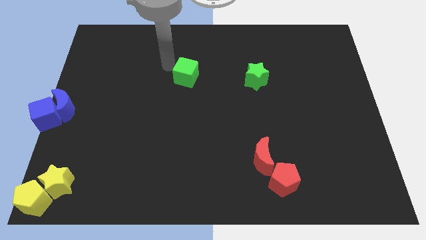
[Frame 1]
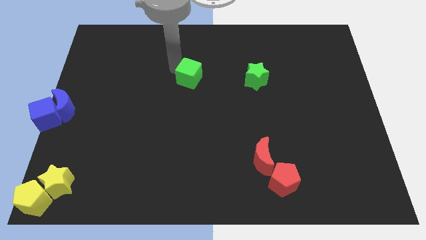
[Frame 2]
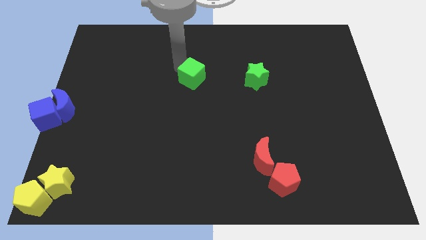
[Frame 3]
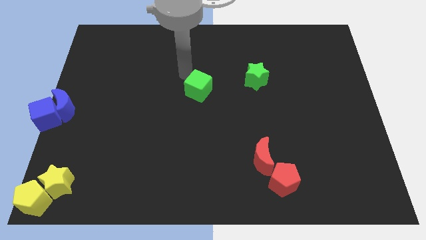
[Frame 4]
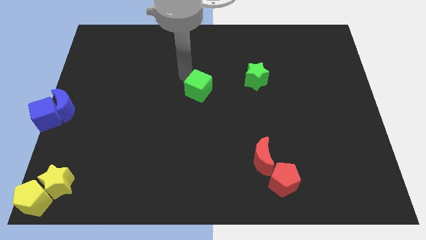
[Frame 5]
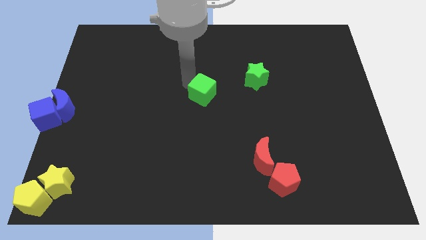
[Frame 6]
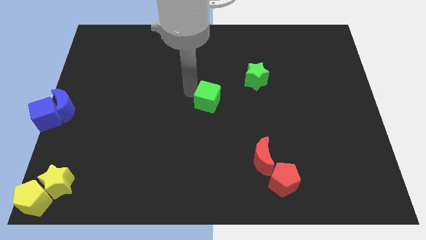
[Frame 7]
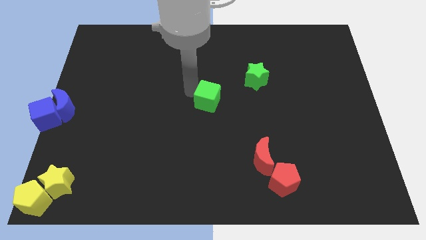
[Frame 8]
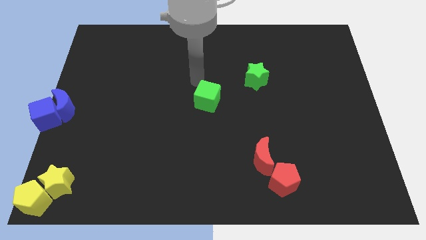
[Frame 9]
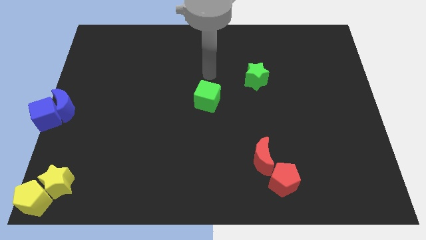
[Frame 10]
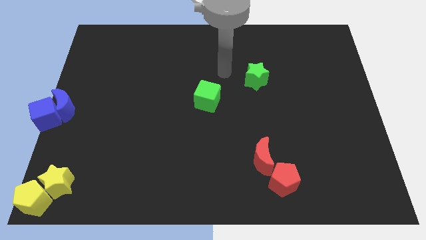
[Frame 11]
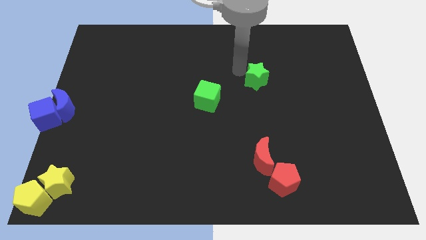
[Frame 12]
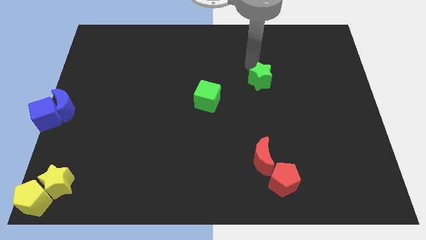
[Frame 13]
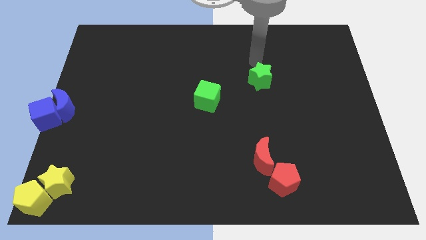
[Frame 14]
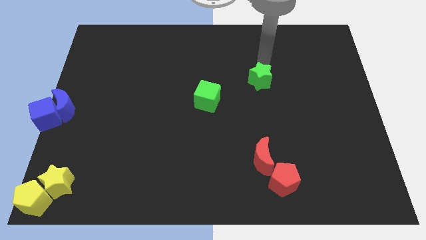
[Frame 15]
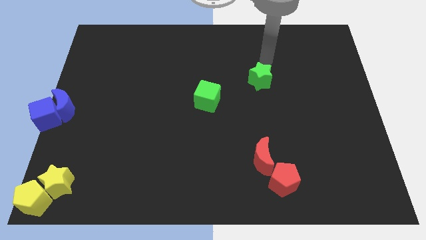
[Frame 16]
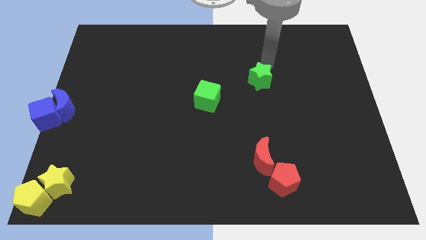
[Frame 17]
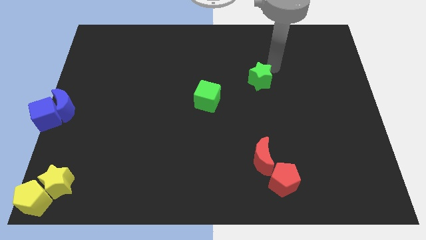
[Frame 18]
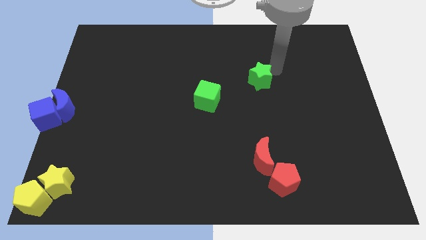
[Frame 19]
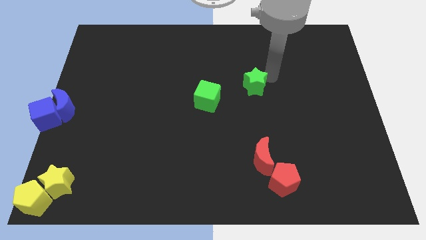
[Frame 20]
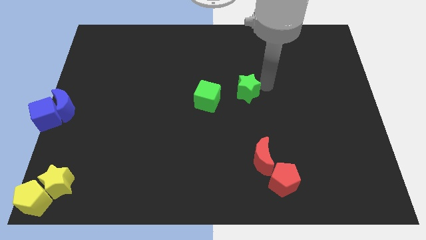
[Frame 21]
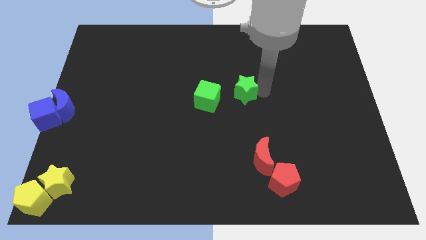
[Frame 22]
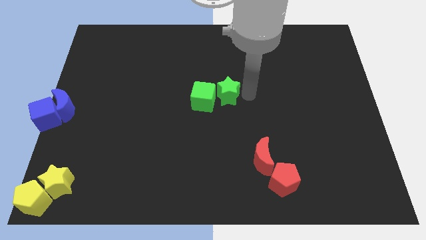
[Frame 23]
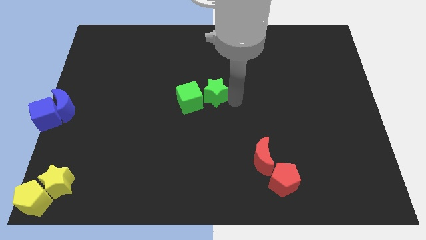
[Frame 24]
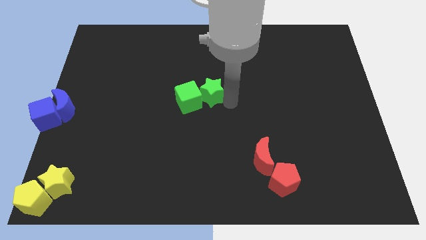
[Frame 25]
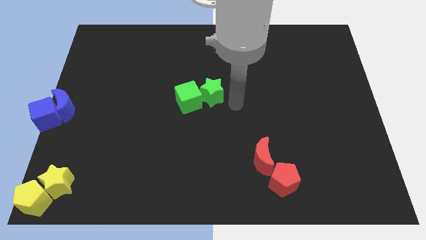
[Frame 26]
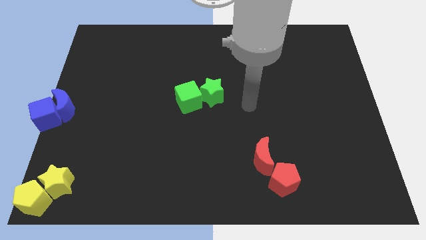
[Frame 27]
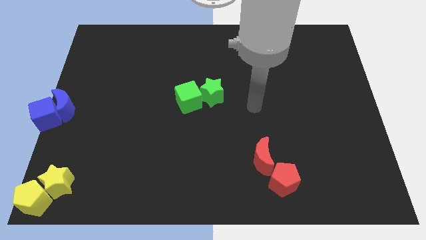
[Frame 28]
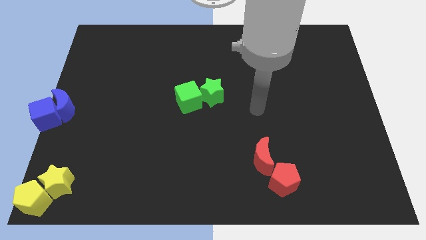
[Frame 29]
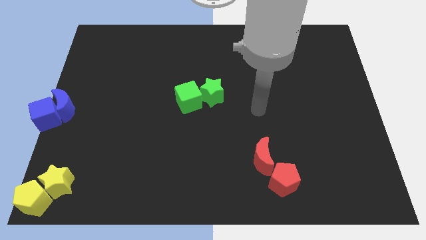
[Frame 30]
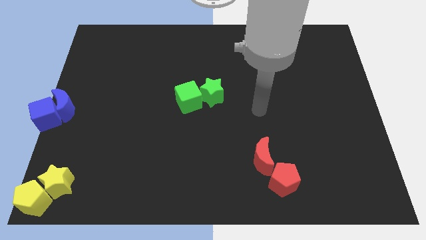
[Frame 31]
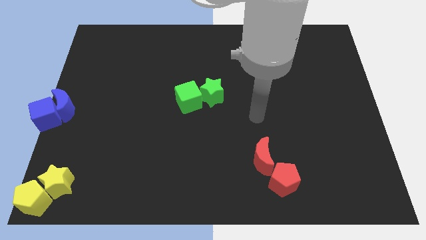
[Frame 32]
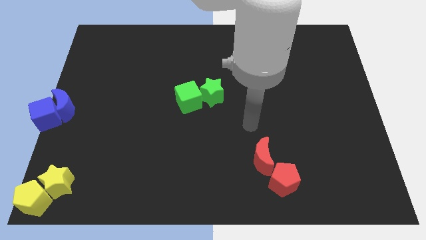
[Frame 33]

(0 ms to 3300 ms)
push the green star into the green cube

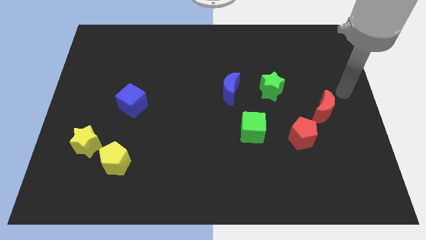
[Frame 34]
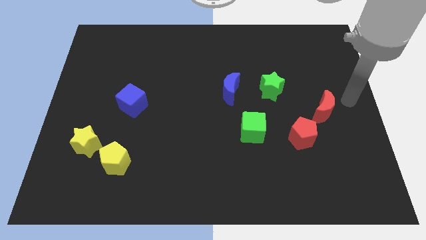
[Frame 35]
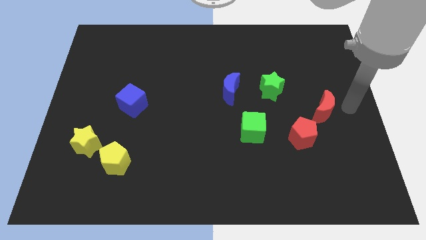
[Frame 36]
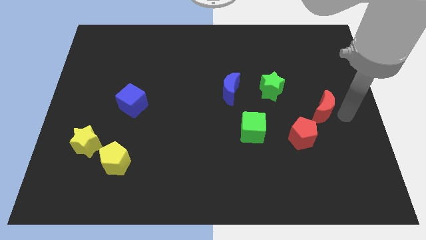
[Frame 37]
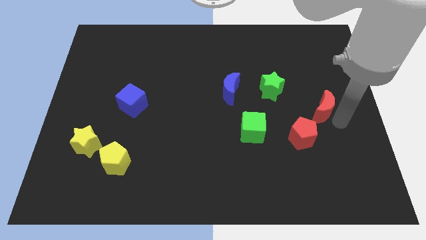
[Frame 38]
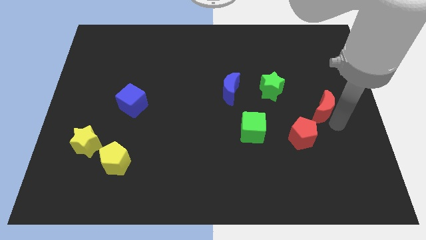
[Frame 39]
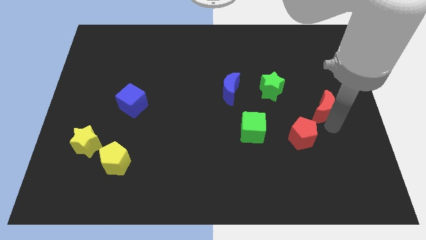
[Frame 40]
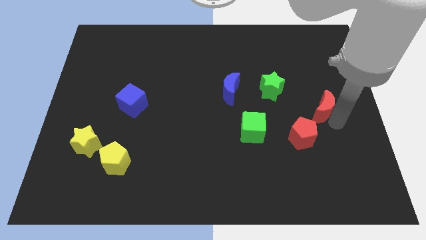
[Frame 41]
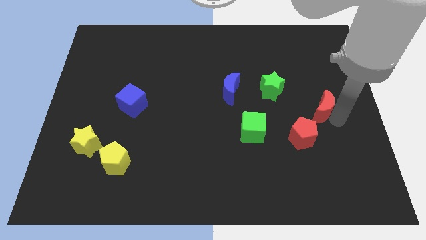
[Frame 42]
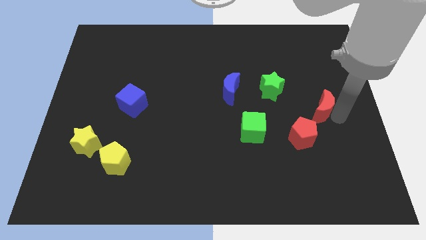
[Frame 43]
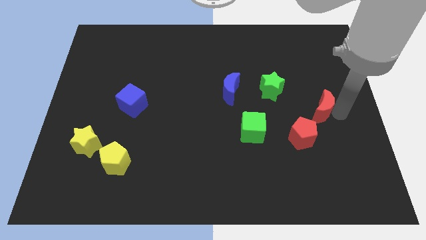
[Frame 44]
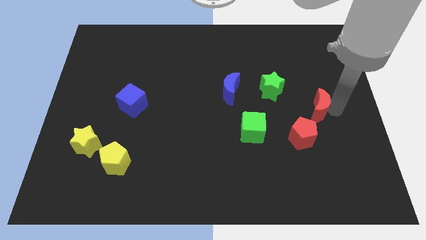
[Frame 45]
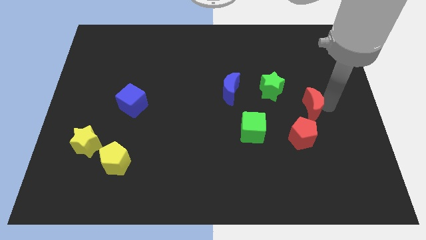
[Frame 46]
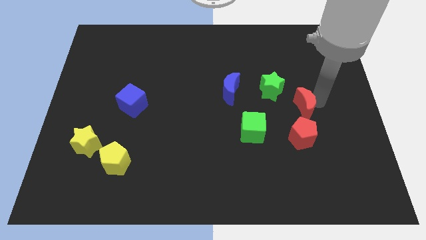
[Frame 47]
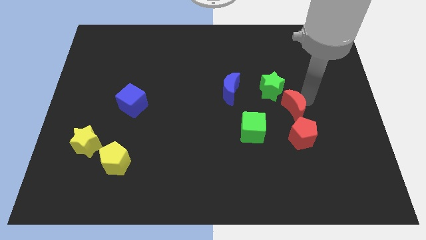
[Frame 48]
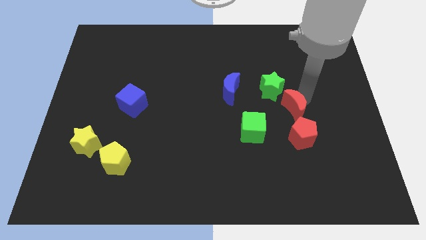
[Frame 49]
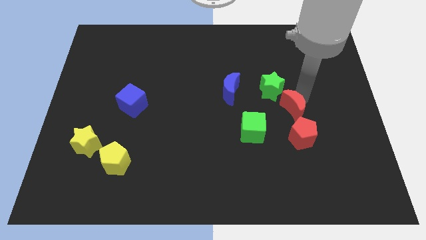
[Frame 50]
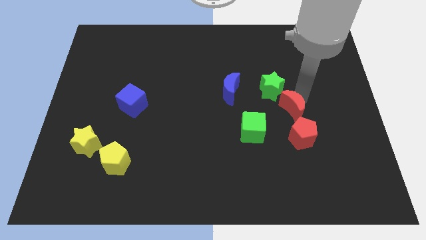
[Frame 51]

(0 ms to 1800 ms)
place red moon in between red pentagon and green star

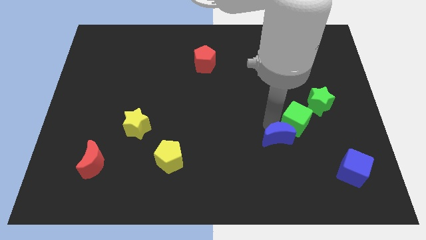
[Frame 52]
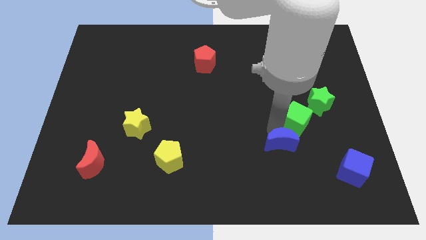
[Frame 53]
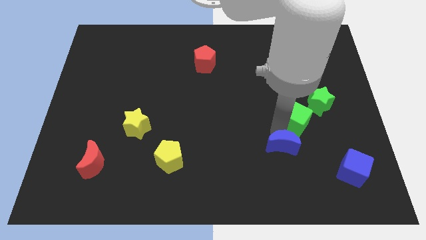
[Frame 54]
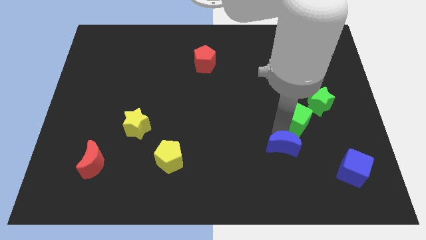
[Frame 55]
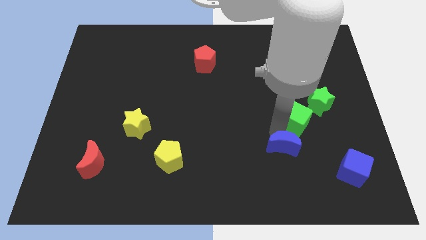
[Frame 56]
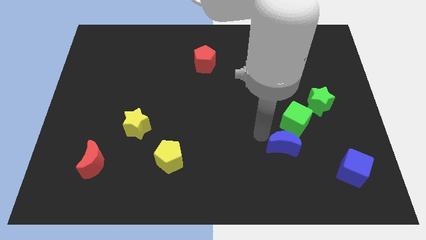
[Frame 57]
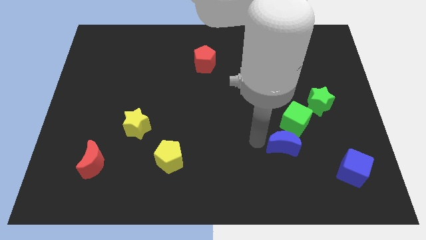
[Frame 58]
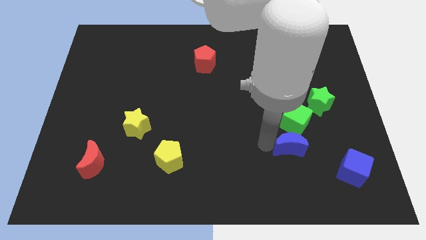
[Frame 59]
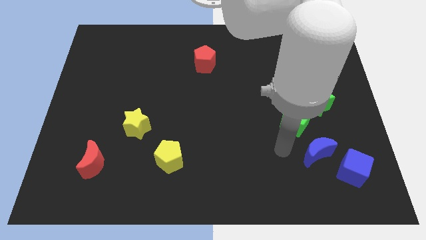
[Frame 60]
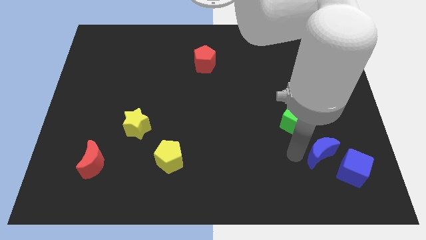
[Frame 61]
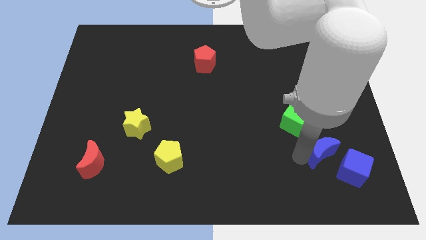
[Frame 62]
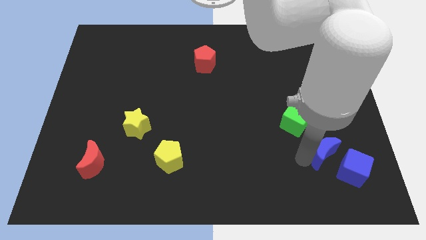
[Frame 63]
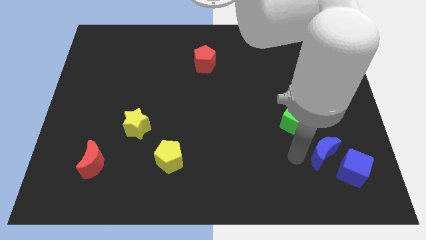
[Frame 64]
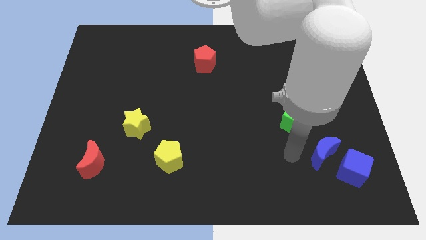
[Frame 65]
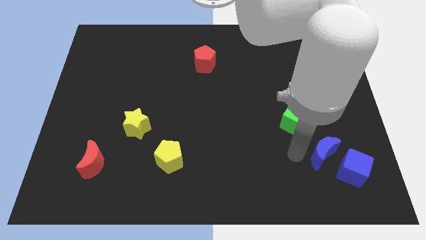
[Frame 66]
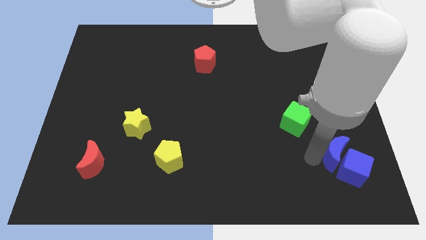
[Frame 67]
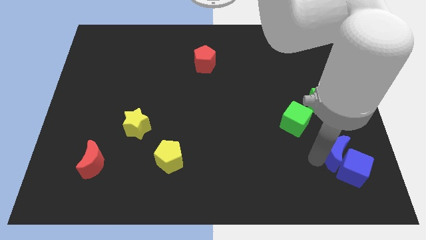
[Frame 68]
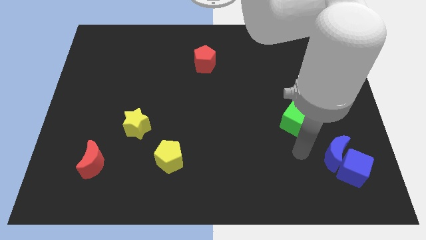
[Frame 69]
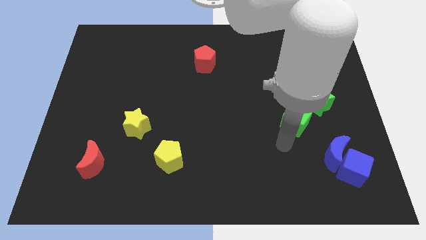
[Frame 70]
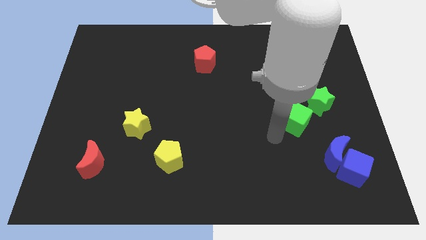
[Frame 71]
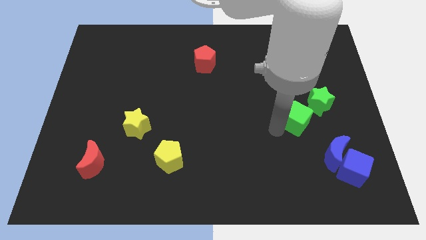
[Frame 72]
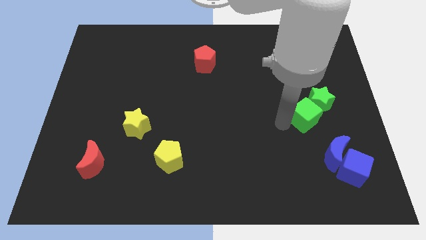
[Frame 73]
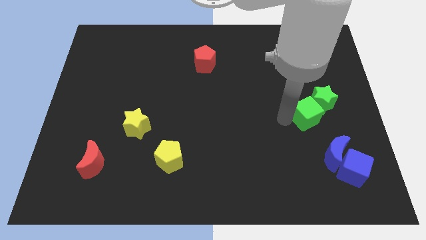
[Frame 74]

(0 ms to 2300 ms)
move the blue moon towards the left side of the blue cube

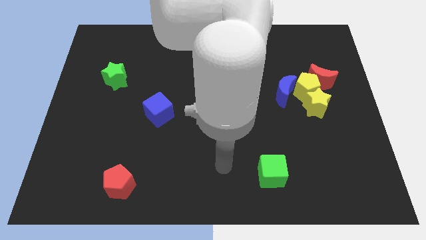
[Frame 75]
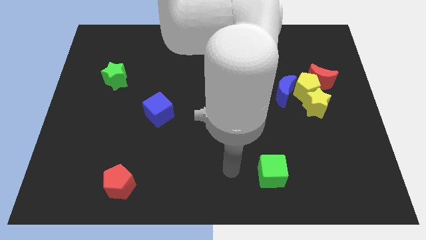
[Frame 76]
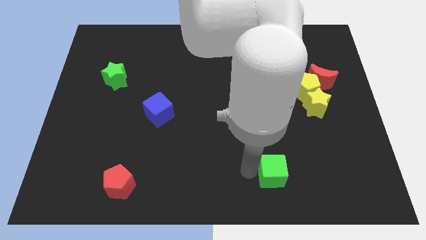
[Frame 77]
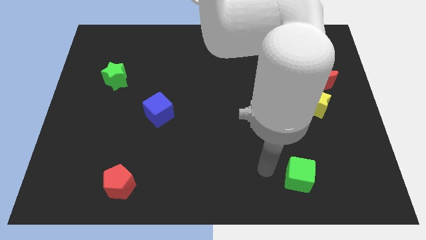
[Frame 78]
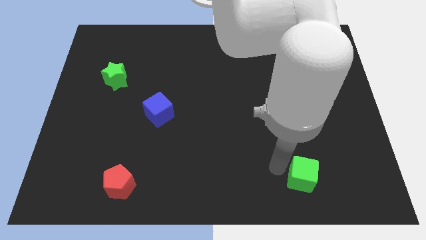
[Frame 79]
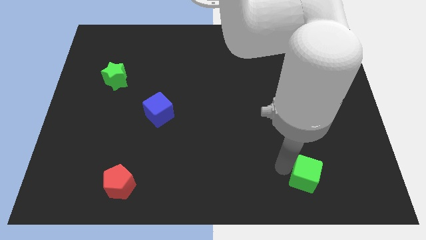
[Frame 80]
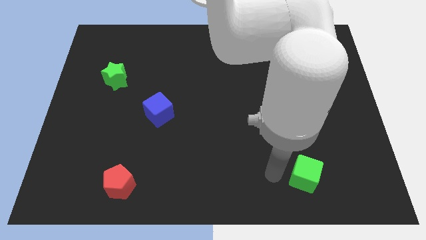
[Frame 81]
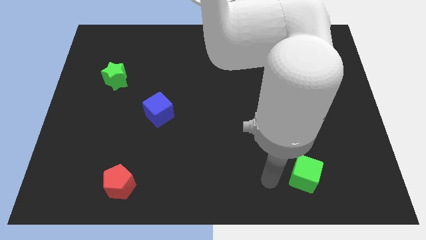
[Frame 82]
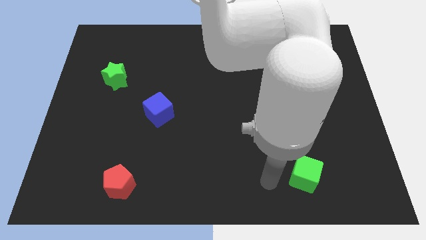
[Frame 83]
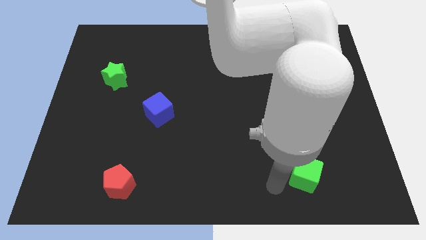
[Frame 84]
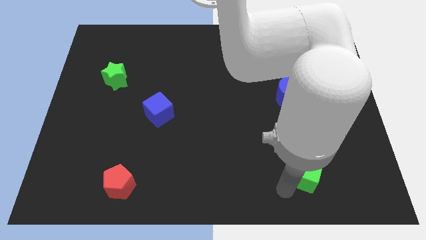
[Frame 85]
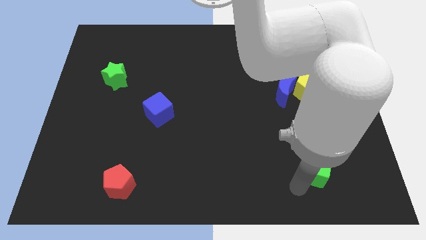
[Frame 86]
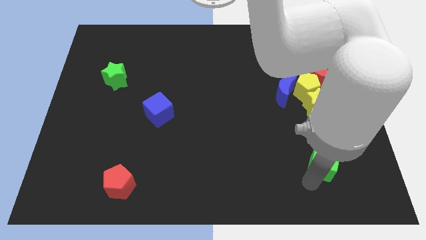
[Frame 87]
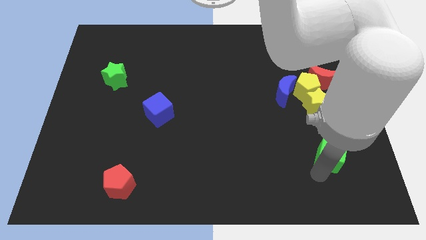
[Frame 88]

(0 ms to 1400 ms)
push the green cube upwards of the board
